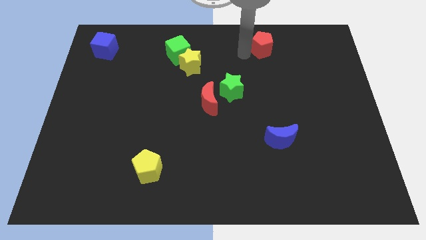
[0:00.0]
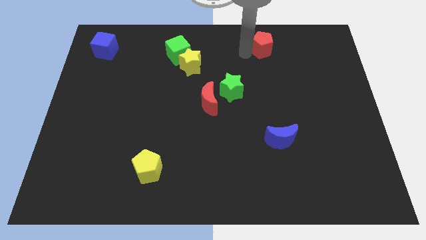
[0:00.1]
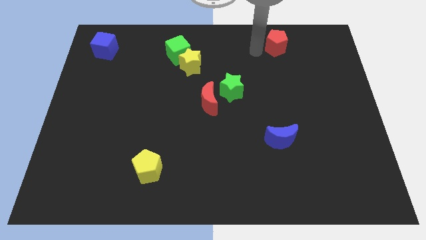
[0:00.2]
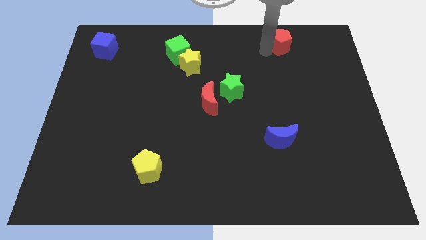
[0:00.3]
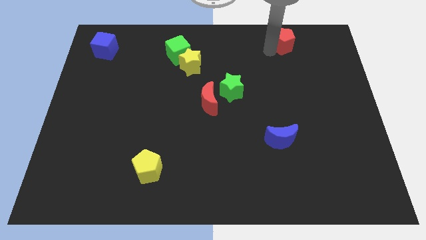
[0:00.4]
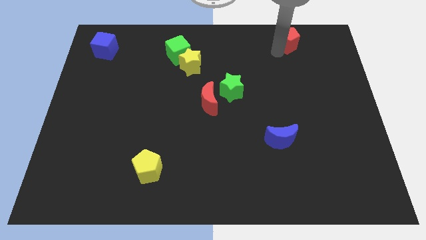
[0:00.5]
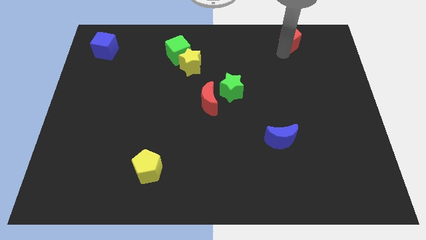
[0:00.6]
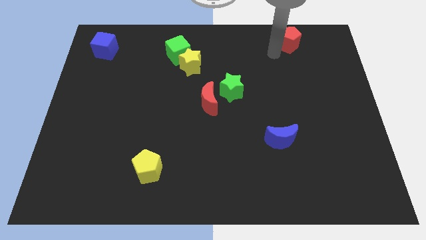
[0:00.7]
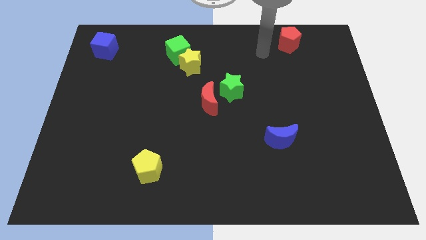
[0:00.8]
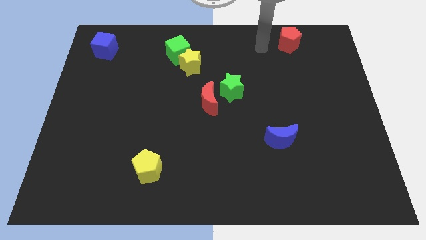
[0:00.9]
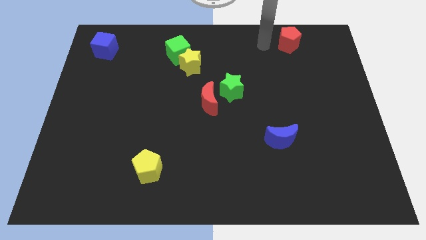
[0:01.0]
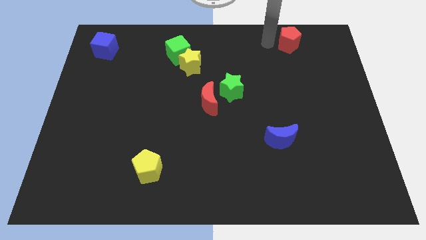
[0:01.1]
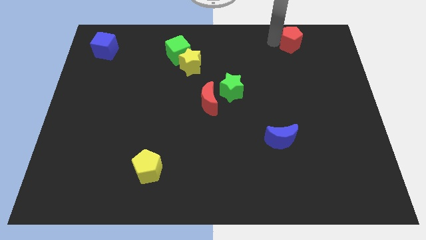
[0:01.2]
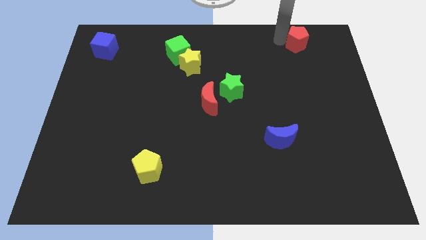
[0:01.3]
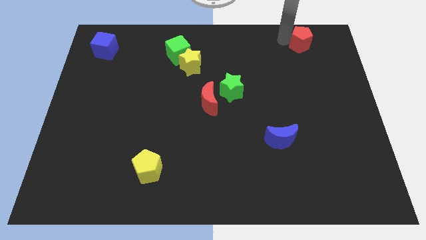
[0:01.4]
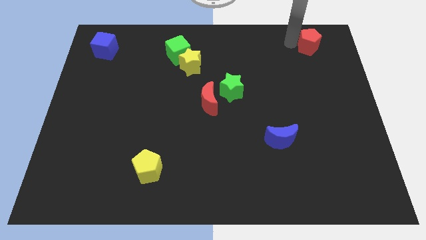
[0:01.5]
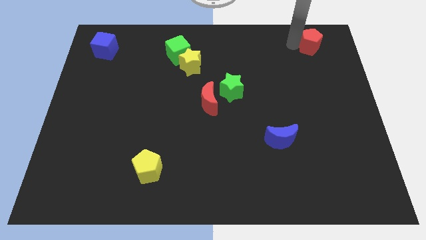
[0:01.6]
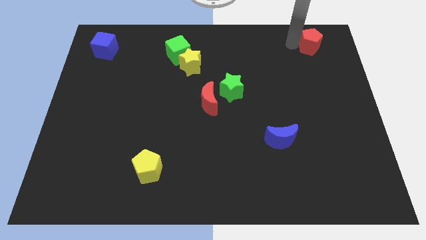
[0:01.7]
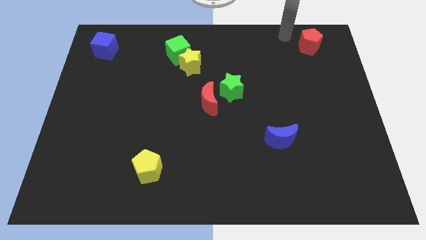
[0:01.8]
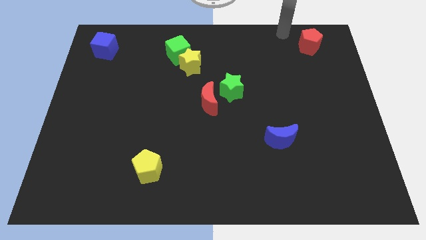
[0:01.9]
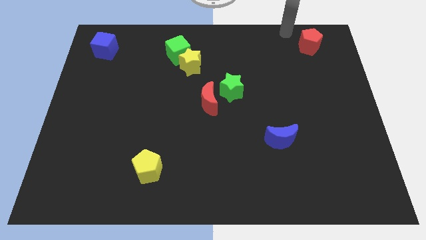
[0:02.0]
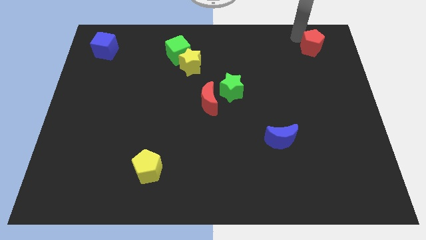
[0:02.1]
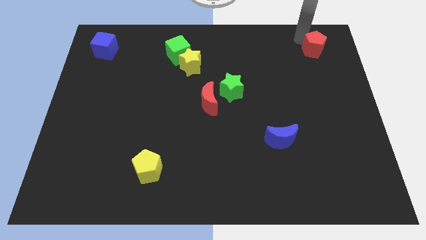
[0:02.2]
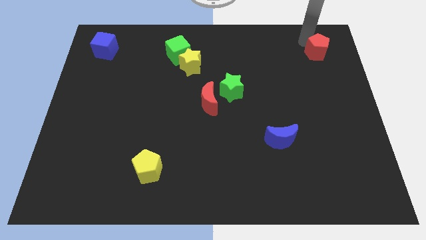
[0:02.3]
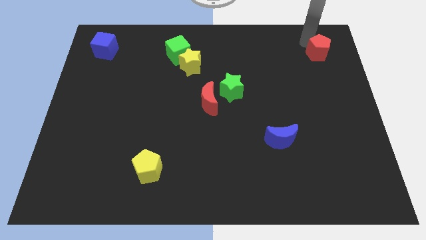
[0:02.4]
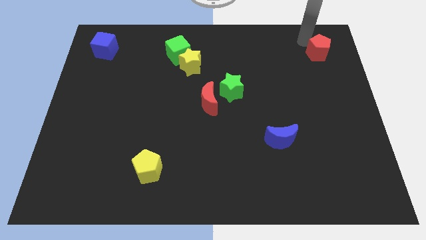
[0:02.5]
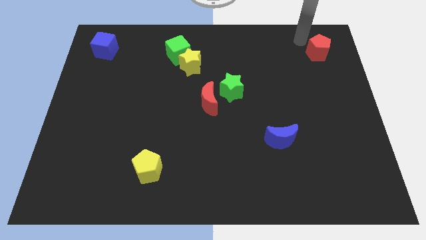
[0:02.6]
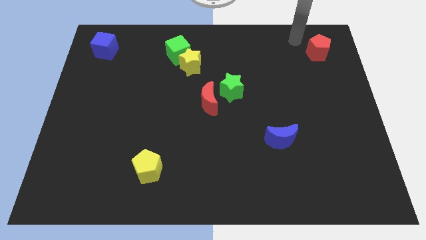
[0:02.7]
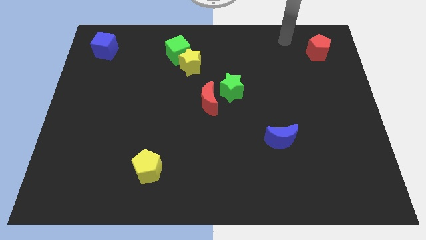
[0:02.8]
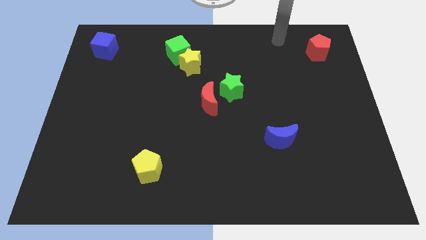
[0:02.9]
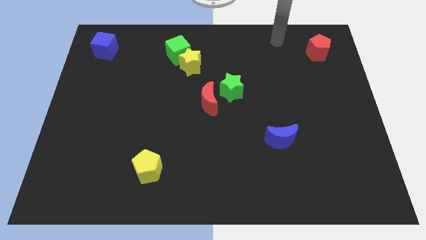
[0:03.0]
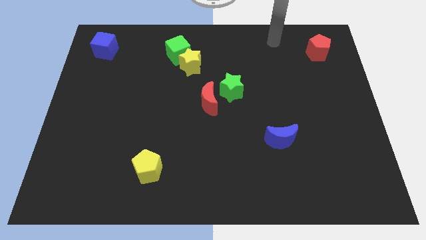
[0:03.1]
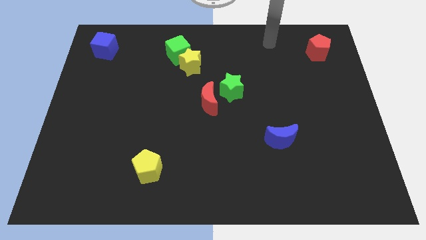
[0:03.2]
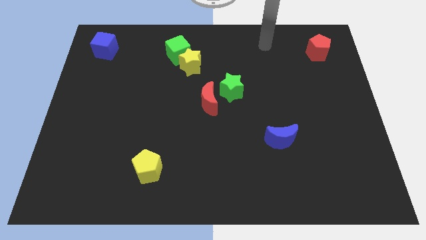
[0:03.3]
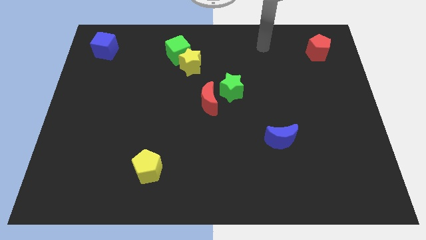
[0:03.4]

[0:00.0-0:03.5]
move the red pentagon to the top right of the blue crescent

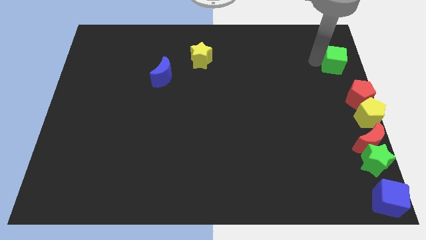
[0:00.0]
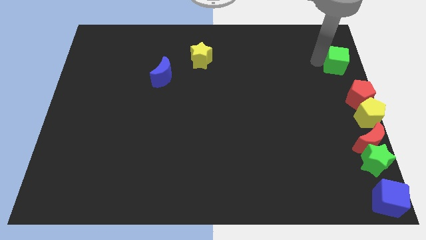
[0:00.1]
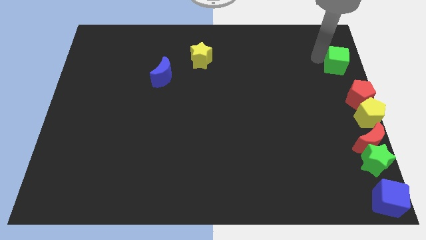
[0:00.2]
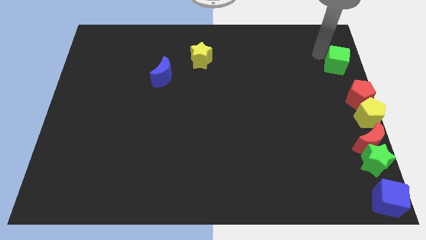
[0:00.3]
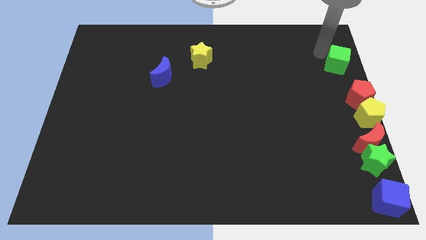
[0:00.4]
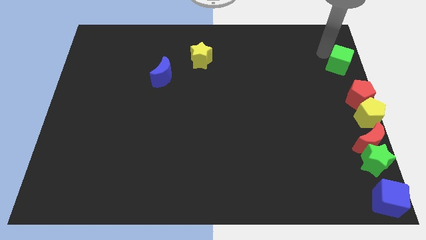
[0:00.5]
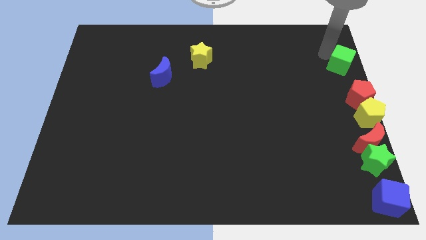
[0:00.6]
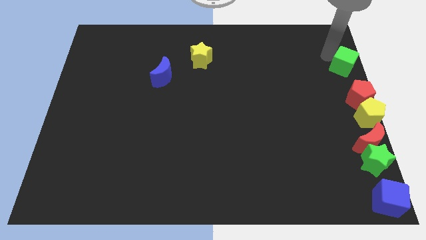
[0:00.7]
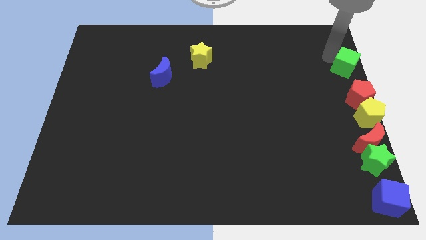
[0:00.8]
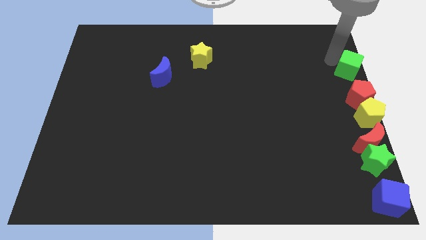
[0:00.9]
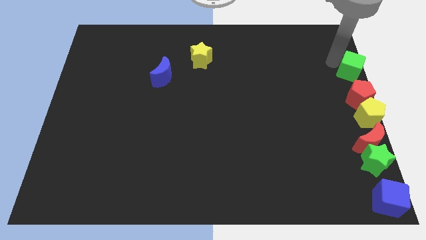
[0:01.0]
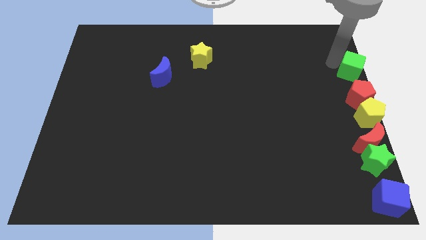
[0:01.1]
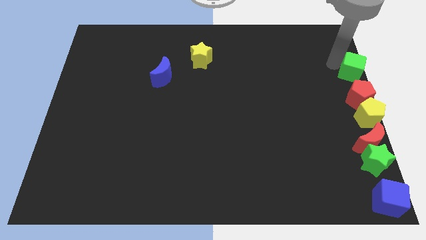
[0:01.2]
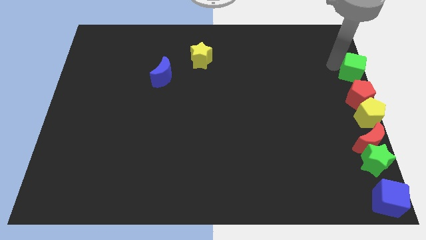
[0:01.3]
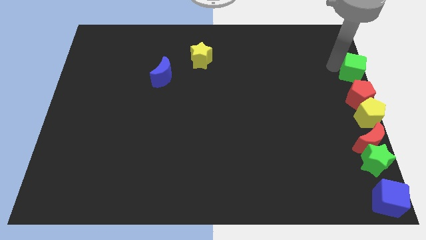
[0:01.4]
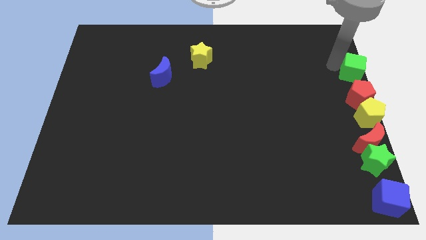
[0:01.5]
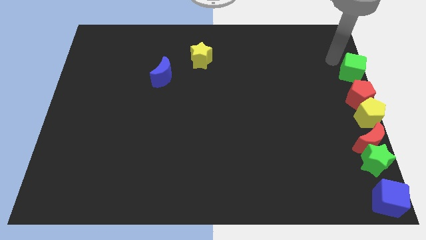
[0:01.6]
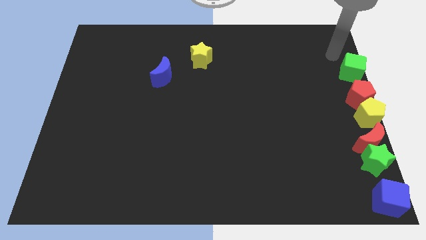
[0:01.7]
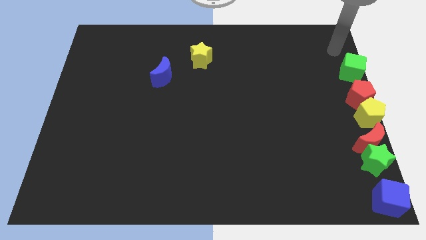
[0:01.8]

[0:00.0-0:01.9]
place the green cube to the top of the red pentagon

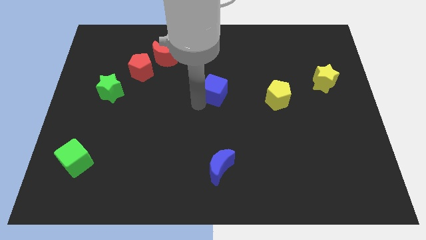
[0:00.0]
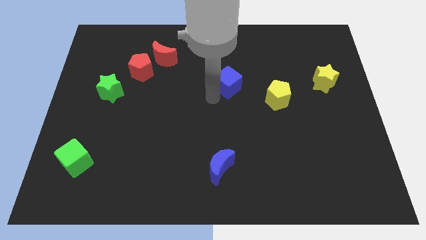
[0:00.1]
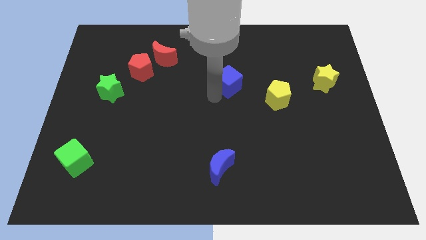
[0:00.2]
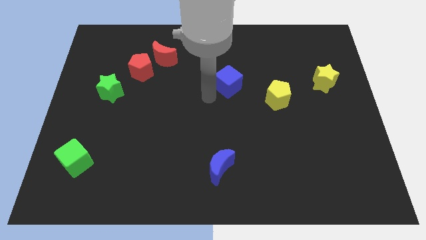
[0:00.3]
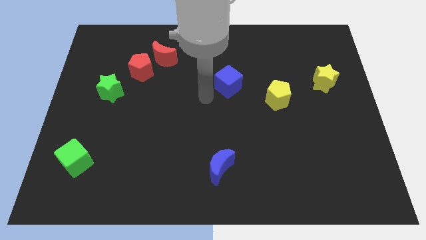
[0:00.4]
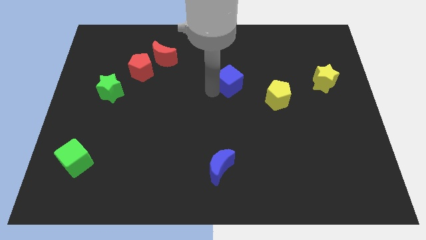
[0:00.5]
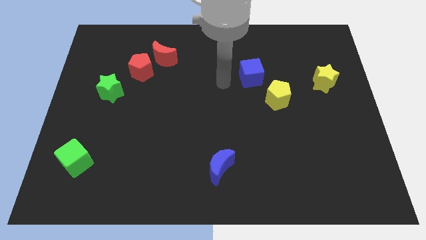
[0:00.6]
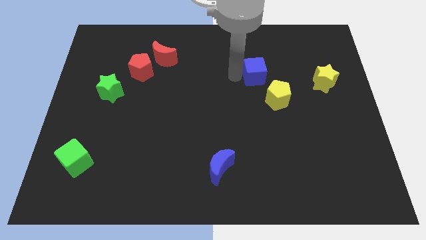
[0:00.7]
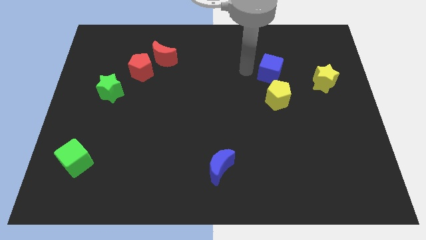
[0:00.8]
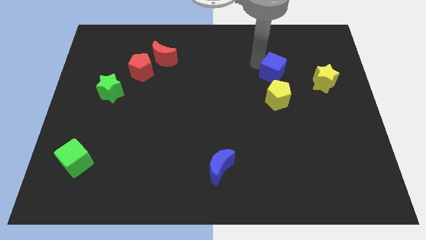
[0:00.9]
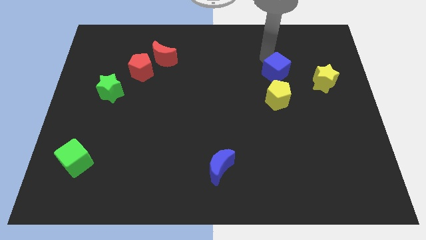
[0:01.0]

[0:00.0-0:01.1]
put the blue cube above the yellow pentagon

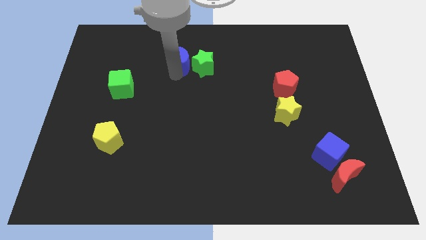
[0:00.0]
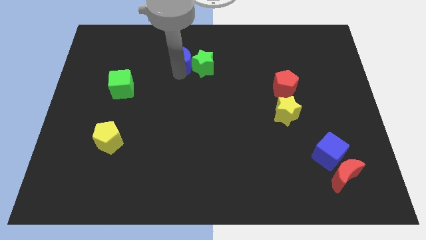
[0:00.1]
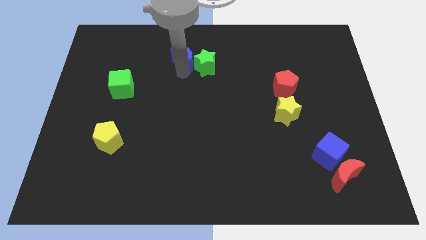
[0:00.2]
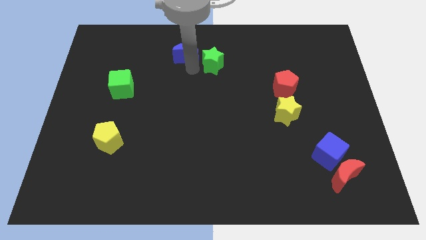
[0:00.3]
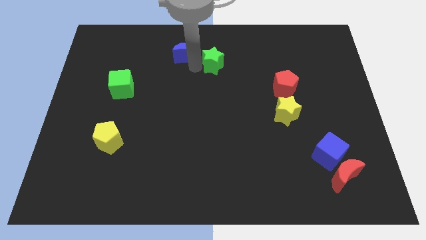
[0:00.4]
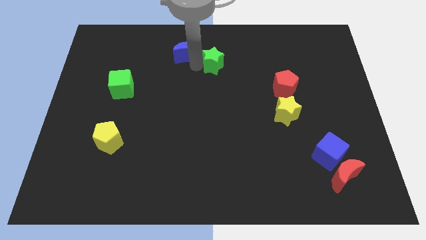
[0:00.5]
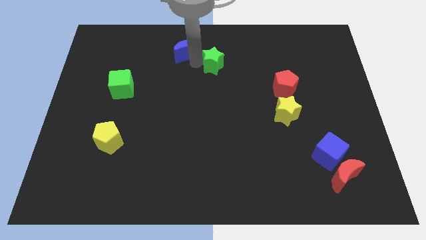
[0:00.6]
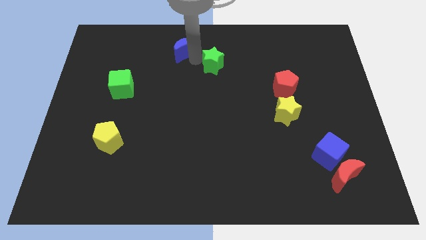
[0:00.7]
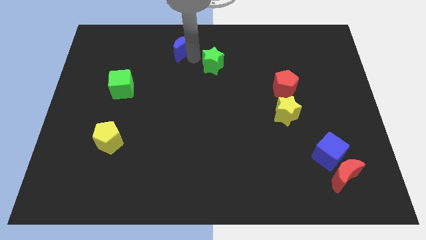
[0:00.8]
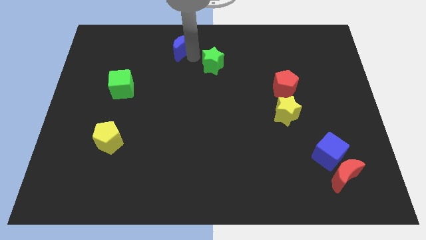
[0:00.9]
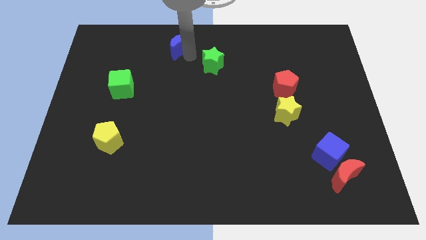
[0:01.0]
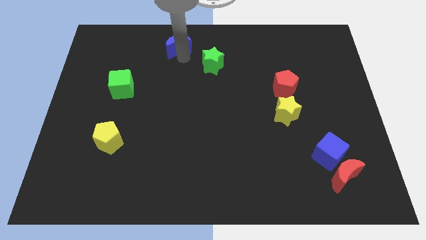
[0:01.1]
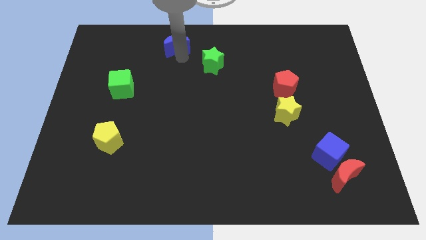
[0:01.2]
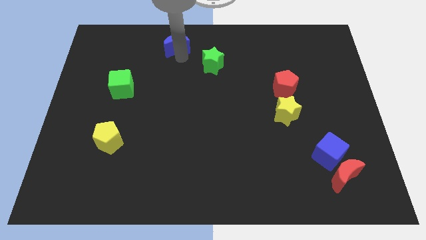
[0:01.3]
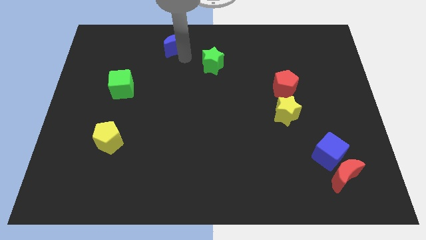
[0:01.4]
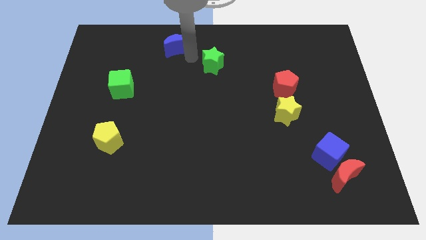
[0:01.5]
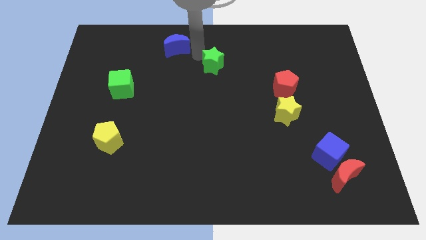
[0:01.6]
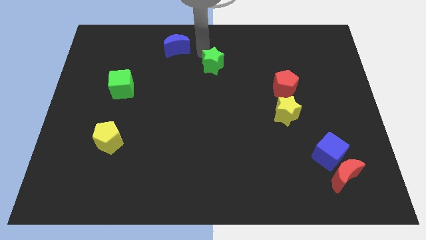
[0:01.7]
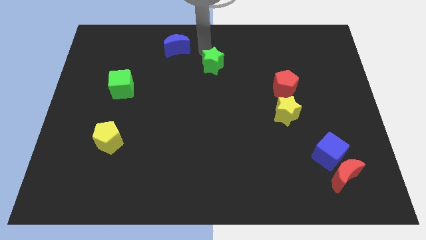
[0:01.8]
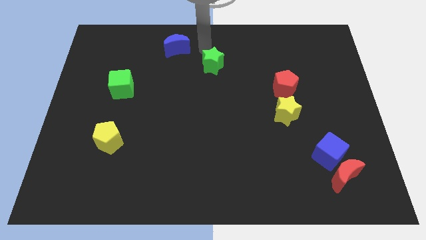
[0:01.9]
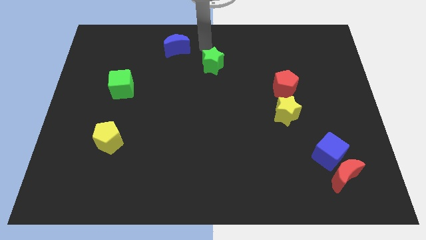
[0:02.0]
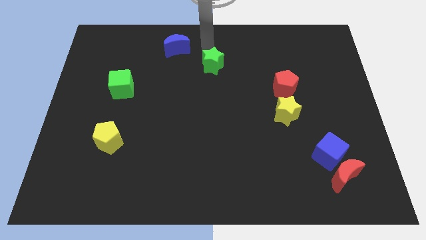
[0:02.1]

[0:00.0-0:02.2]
separate the green star and the blue crescent

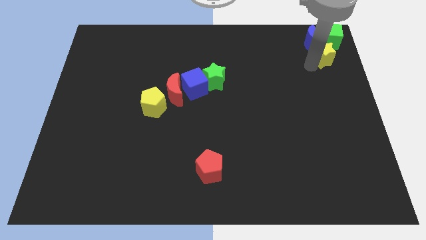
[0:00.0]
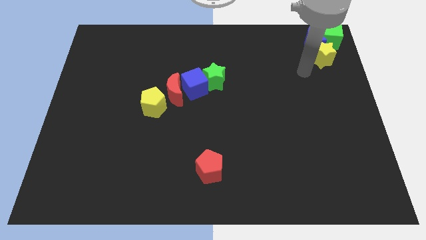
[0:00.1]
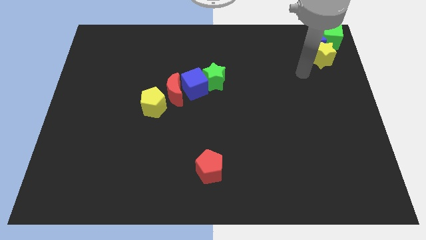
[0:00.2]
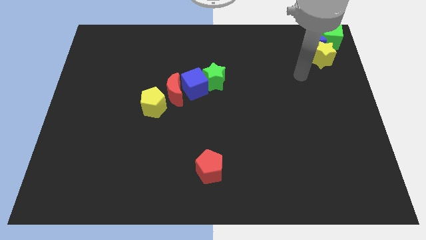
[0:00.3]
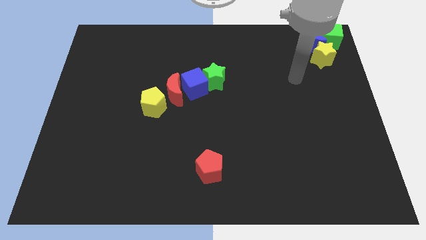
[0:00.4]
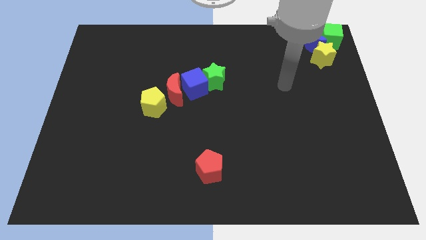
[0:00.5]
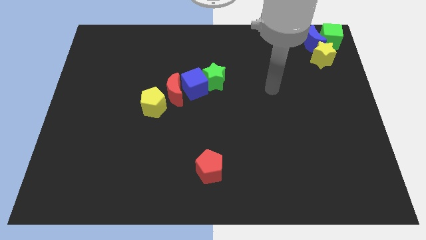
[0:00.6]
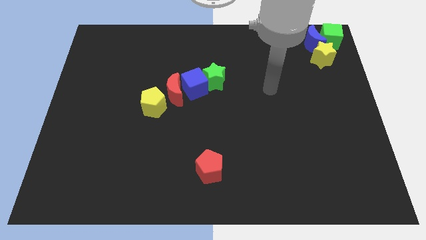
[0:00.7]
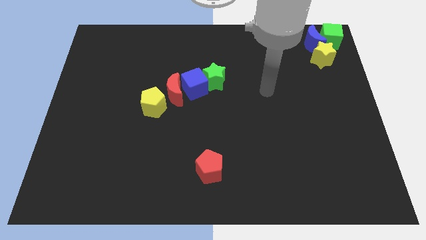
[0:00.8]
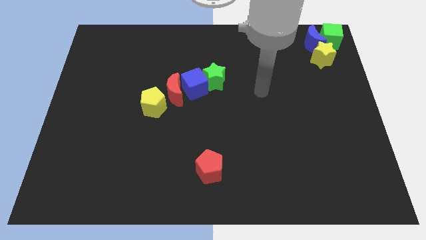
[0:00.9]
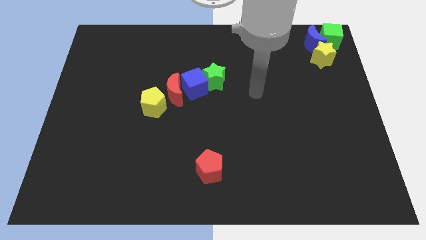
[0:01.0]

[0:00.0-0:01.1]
move the arm away from the yellow star
